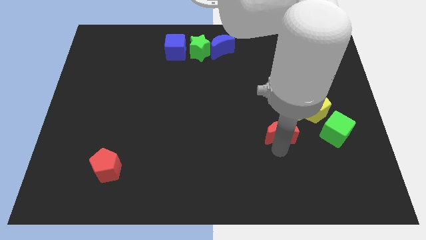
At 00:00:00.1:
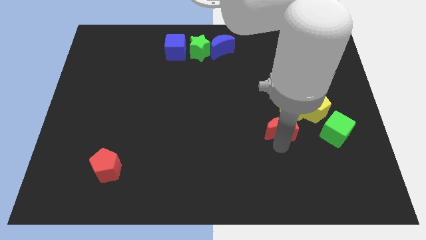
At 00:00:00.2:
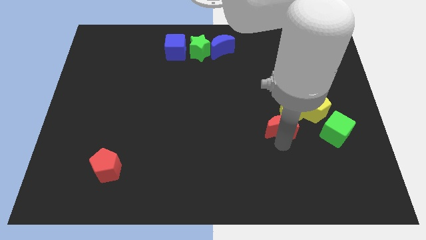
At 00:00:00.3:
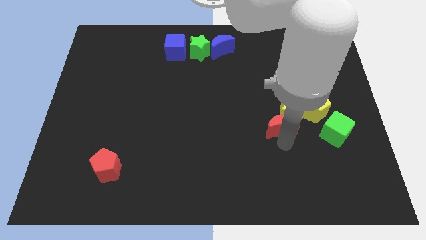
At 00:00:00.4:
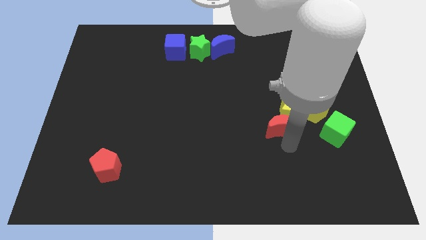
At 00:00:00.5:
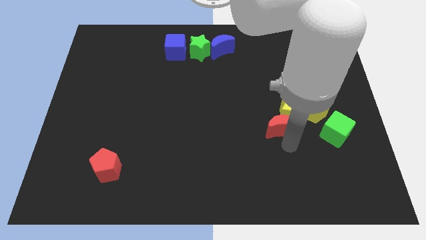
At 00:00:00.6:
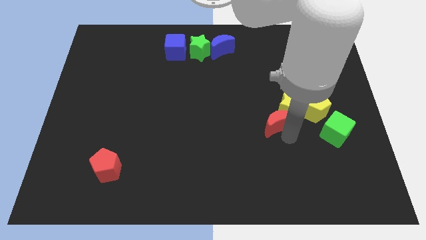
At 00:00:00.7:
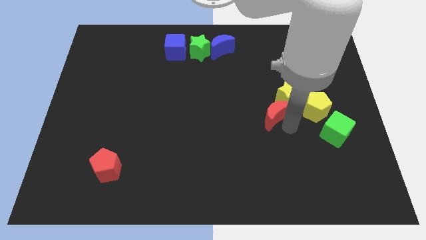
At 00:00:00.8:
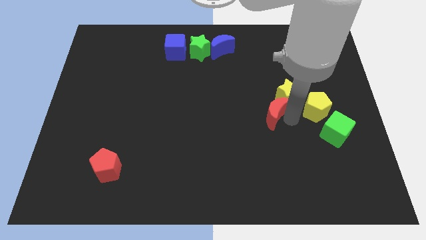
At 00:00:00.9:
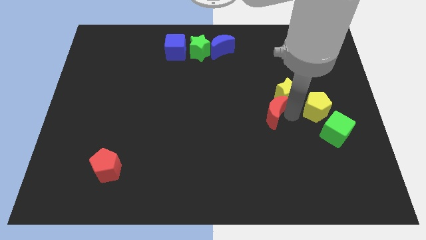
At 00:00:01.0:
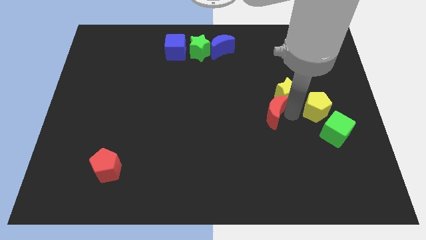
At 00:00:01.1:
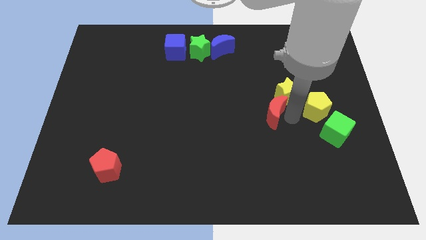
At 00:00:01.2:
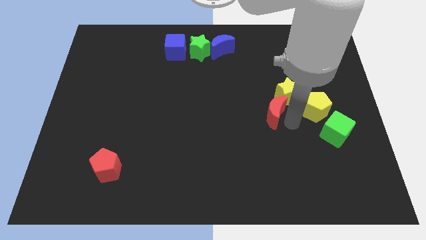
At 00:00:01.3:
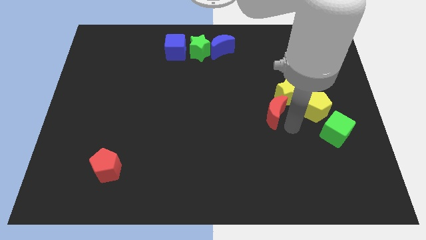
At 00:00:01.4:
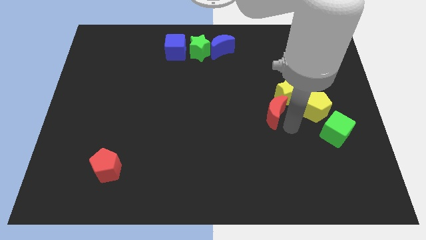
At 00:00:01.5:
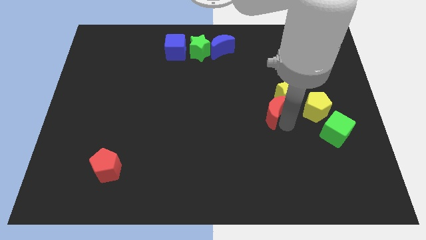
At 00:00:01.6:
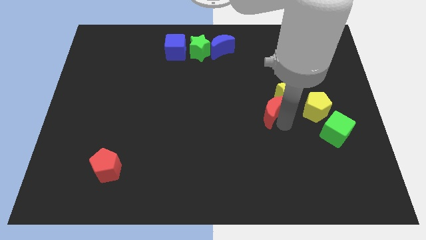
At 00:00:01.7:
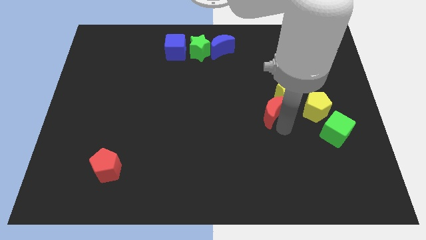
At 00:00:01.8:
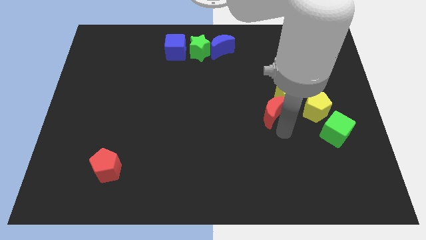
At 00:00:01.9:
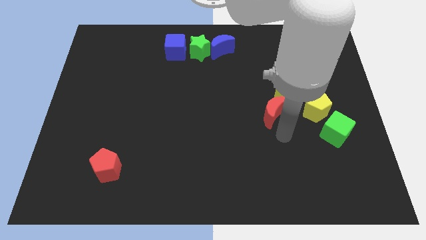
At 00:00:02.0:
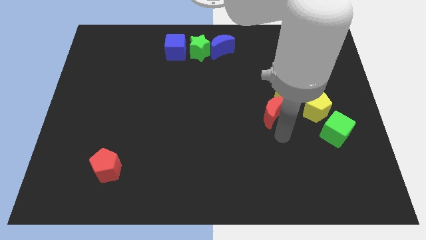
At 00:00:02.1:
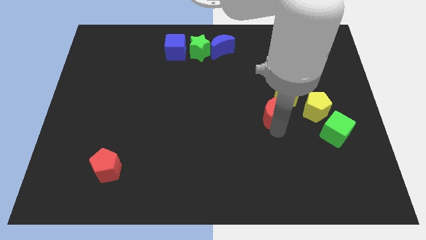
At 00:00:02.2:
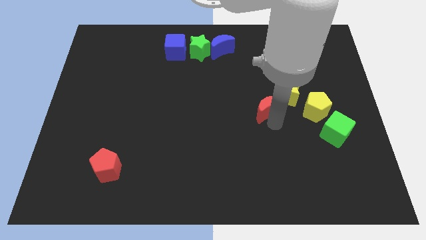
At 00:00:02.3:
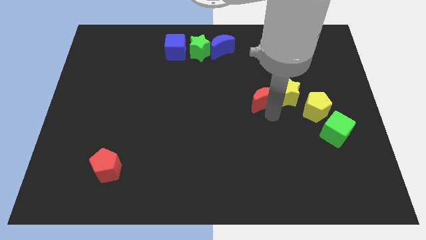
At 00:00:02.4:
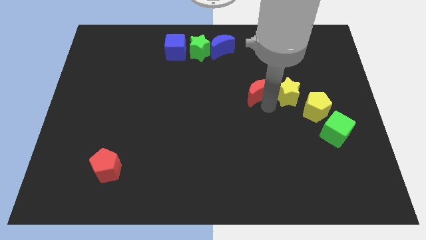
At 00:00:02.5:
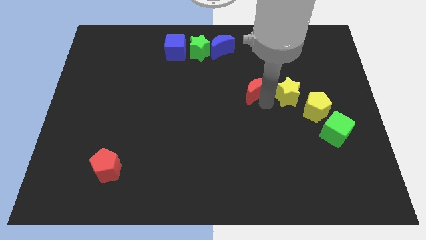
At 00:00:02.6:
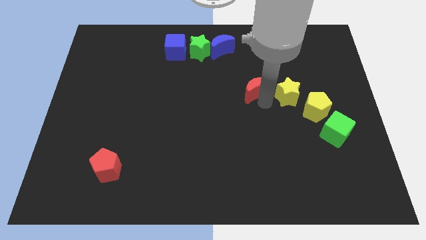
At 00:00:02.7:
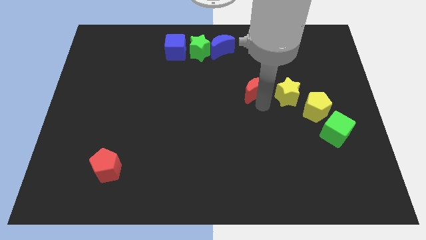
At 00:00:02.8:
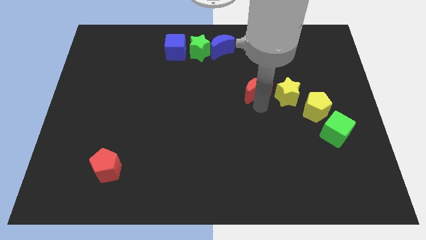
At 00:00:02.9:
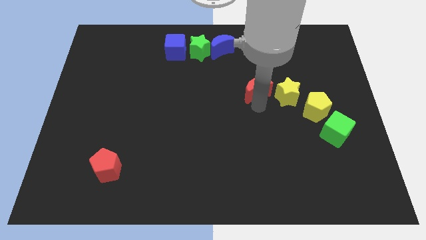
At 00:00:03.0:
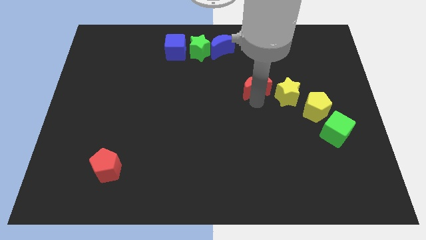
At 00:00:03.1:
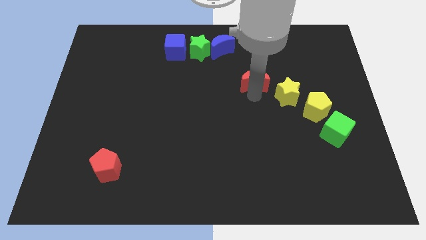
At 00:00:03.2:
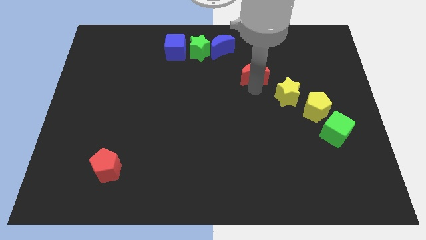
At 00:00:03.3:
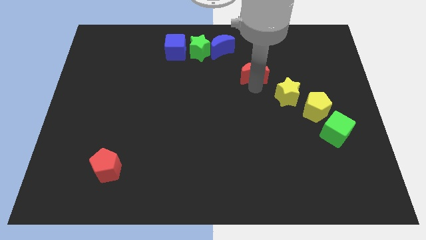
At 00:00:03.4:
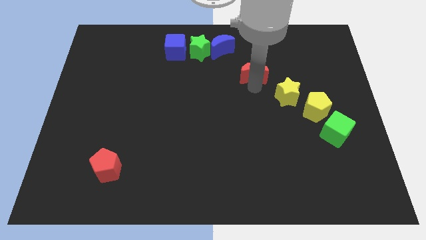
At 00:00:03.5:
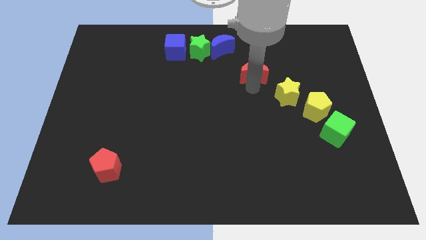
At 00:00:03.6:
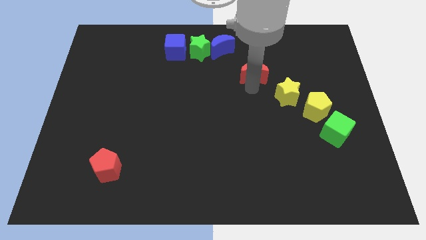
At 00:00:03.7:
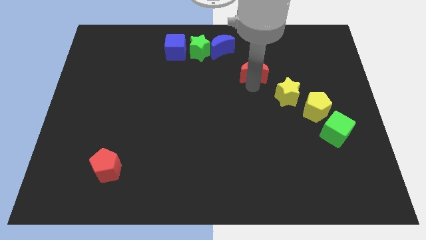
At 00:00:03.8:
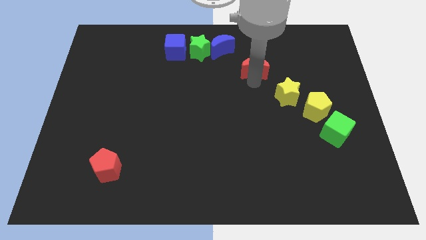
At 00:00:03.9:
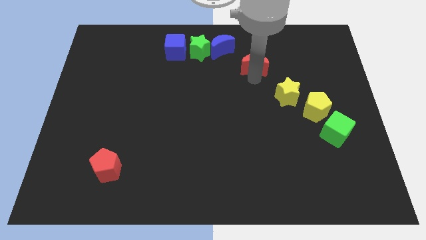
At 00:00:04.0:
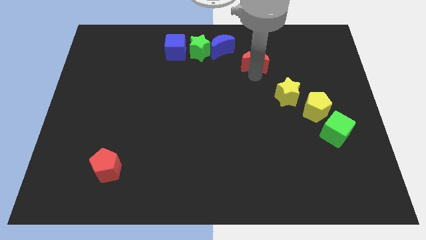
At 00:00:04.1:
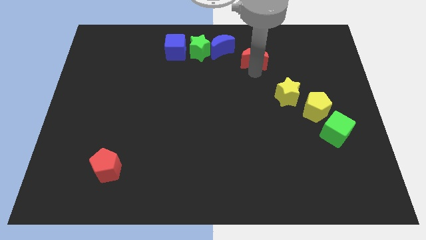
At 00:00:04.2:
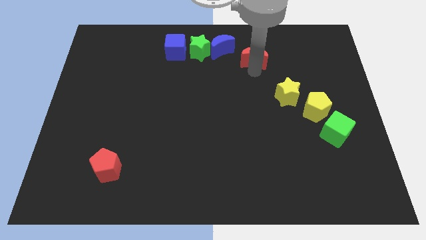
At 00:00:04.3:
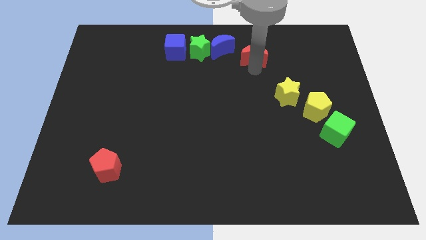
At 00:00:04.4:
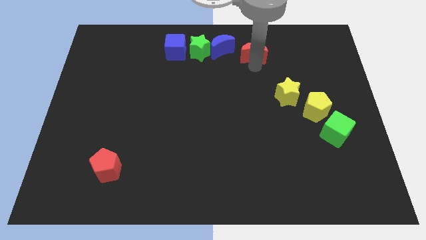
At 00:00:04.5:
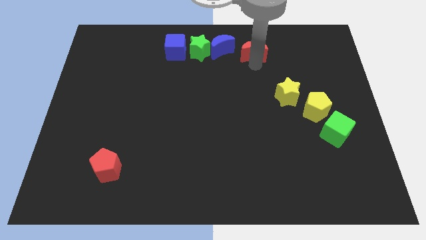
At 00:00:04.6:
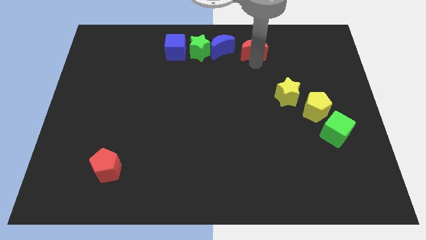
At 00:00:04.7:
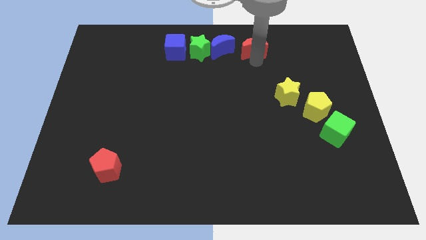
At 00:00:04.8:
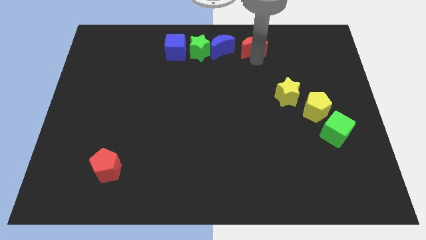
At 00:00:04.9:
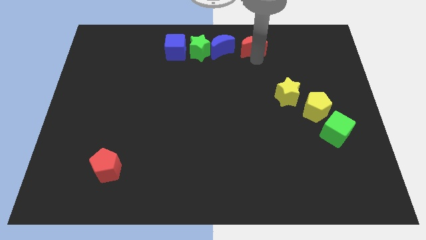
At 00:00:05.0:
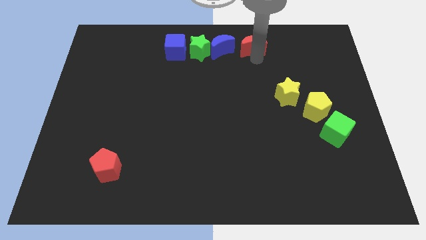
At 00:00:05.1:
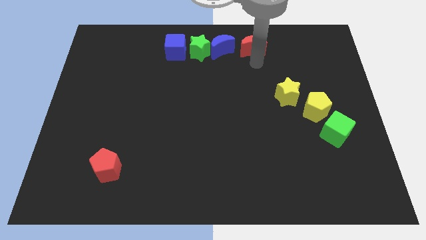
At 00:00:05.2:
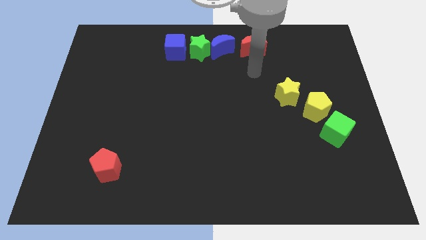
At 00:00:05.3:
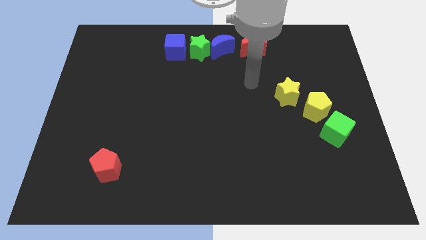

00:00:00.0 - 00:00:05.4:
push red half moon to top center of the board

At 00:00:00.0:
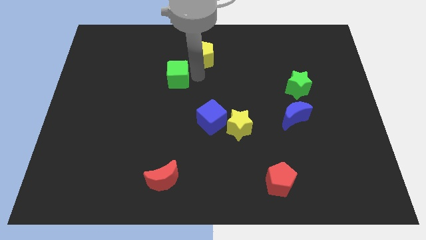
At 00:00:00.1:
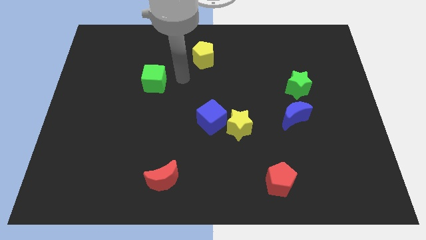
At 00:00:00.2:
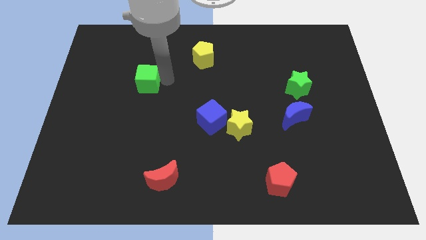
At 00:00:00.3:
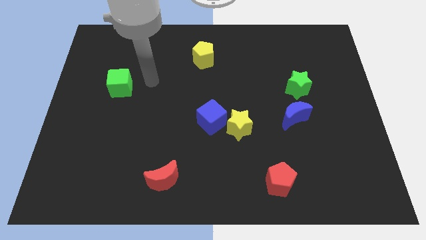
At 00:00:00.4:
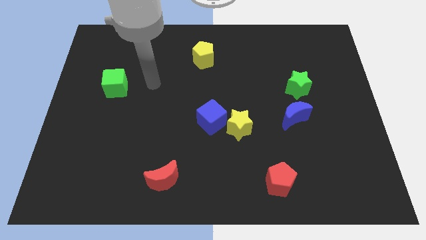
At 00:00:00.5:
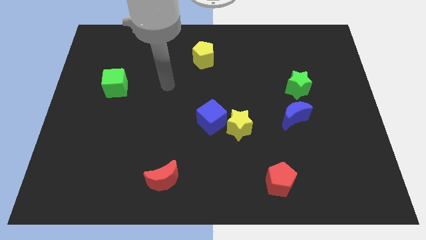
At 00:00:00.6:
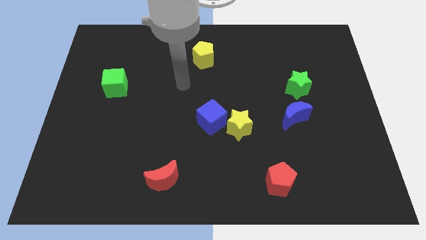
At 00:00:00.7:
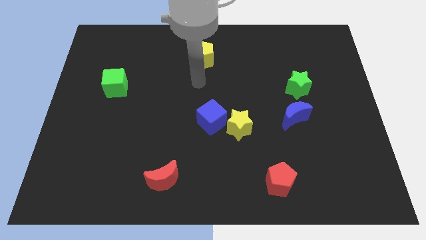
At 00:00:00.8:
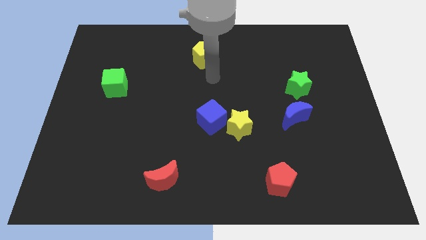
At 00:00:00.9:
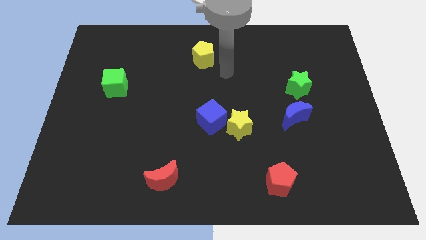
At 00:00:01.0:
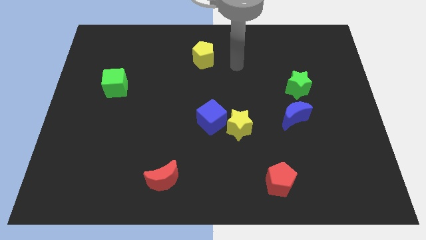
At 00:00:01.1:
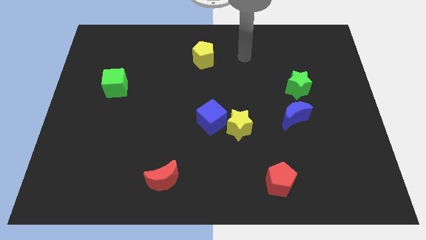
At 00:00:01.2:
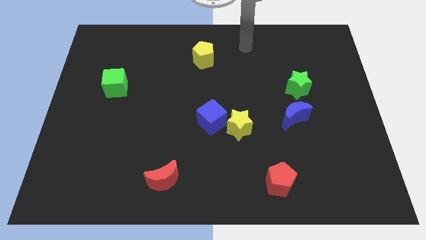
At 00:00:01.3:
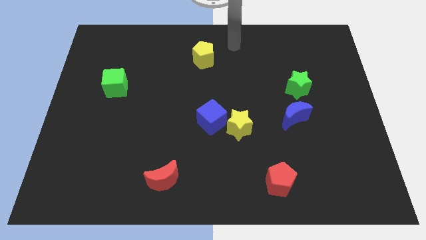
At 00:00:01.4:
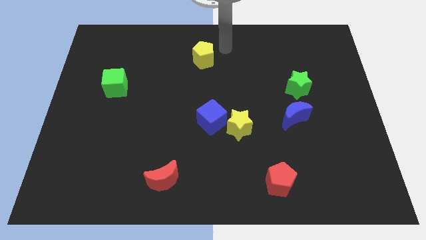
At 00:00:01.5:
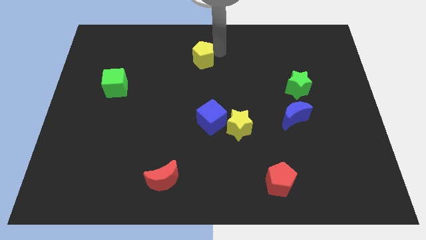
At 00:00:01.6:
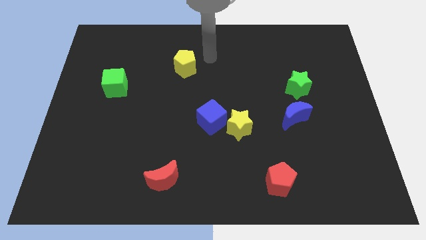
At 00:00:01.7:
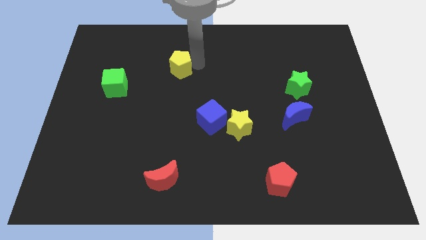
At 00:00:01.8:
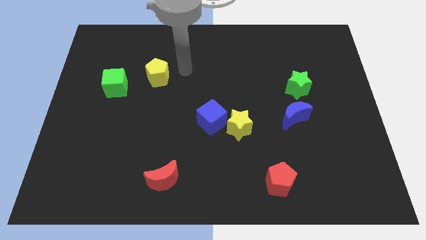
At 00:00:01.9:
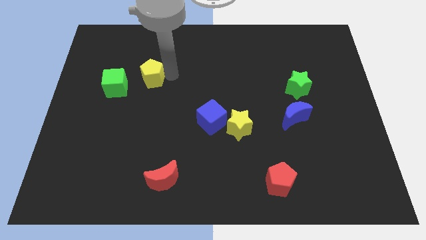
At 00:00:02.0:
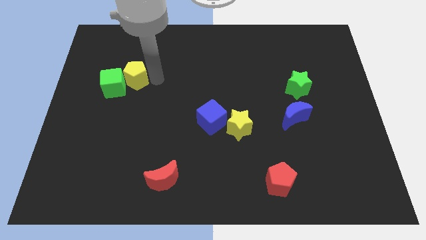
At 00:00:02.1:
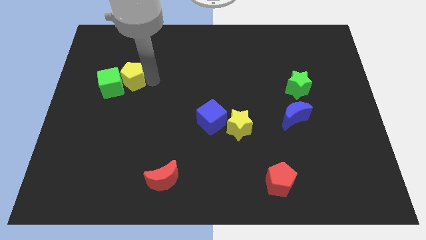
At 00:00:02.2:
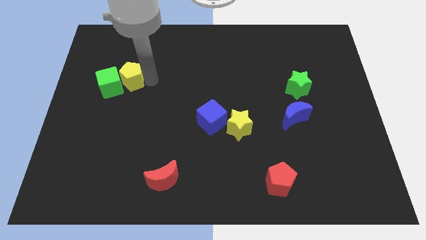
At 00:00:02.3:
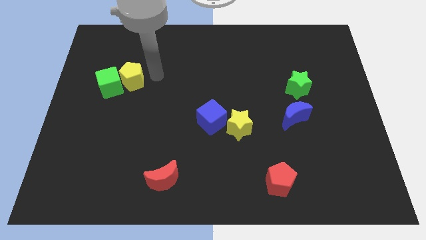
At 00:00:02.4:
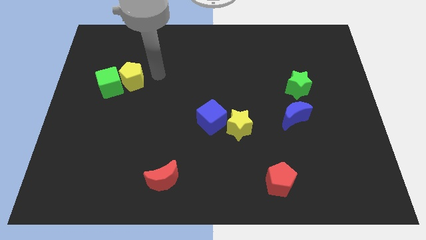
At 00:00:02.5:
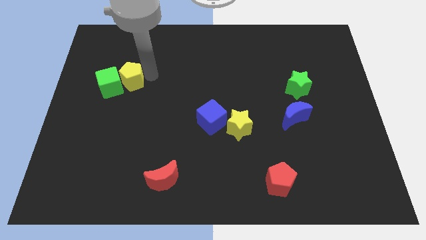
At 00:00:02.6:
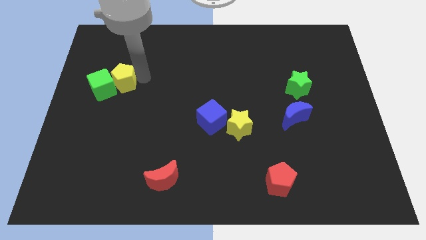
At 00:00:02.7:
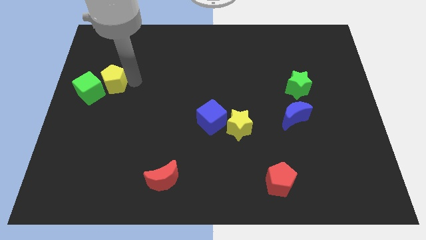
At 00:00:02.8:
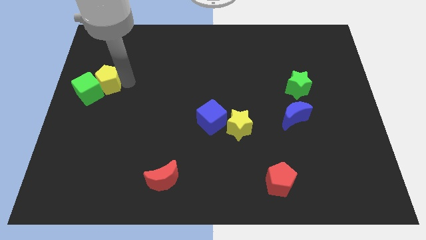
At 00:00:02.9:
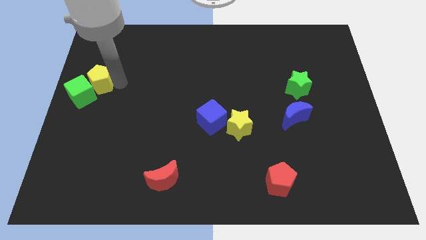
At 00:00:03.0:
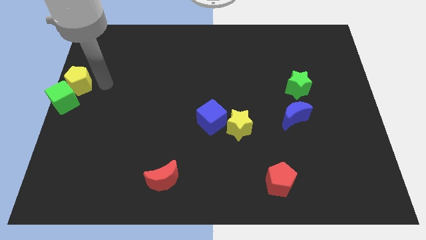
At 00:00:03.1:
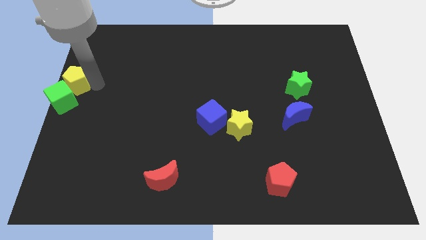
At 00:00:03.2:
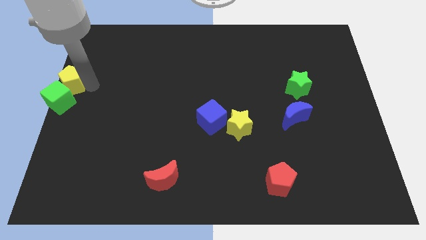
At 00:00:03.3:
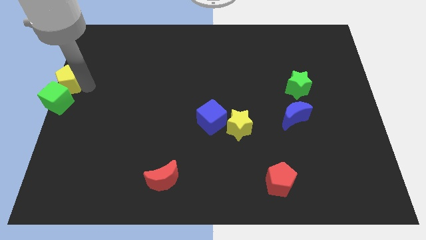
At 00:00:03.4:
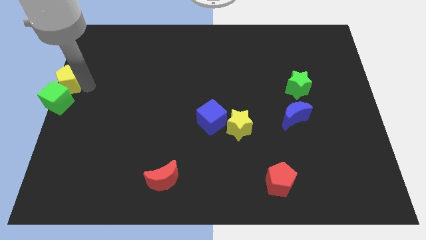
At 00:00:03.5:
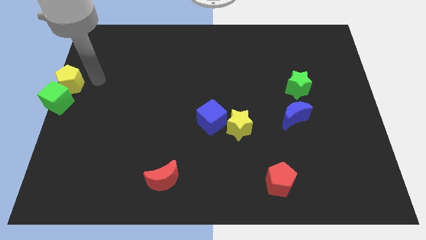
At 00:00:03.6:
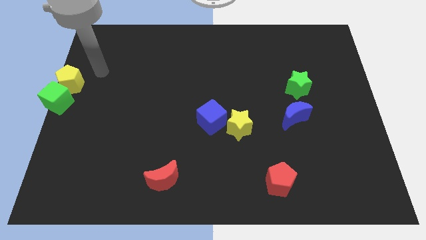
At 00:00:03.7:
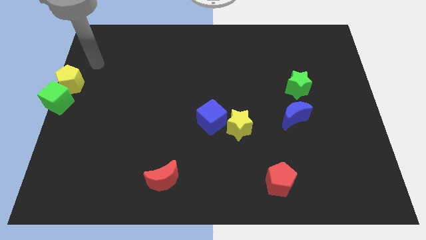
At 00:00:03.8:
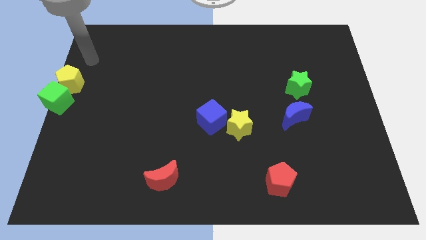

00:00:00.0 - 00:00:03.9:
move the yellow pentagon along with the green cube to the left center of the board
